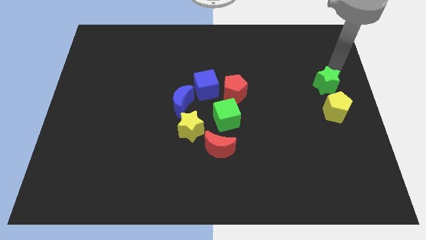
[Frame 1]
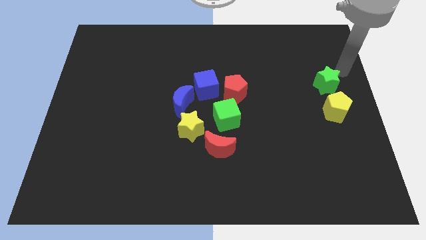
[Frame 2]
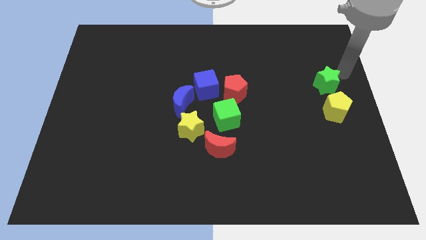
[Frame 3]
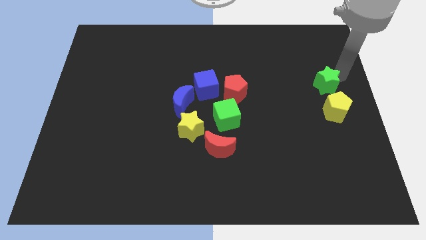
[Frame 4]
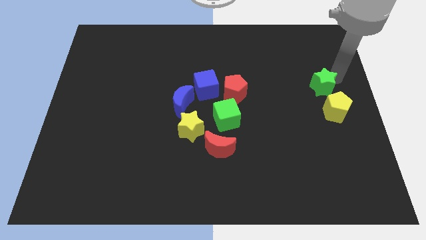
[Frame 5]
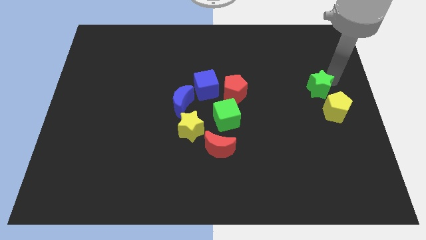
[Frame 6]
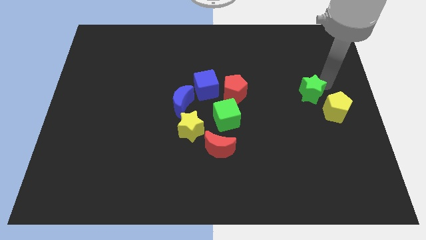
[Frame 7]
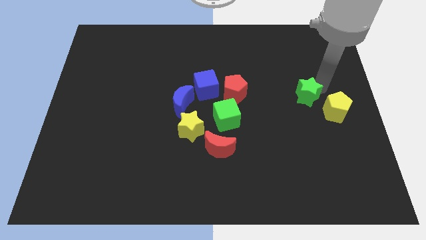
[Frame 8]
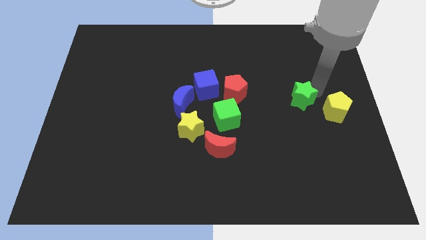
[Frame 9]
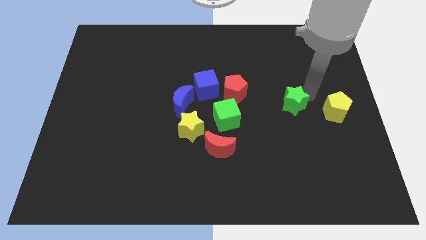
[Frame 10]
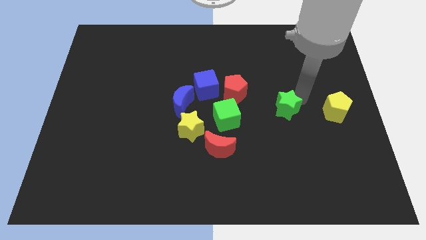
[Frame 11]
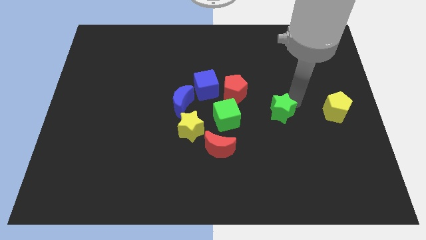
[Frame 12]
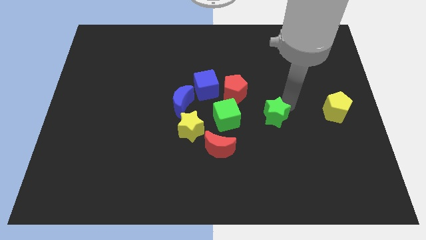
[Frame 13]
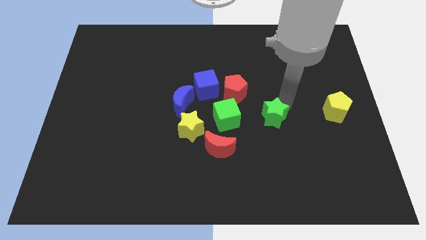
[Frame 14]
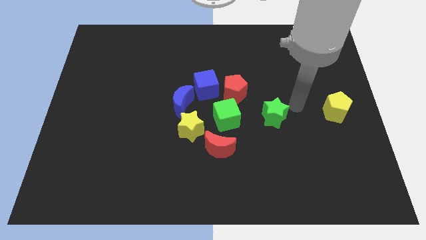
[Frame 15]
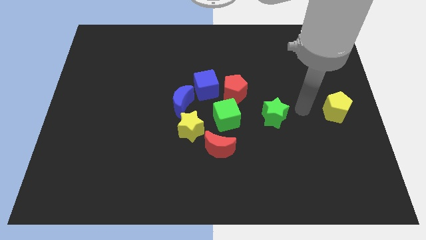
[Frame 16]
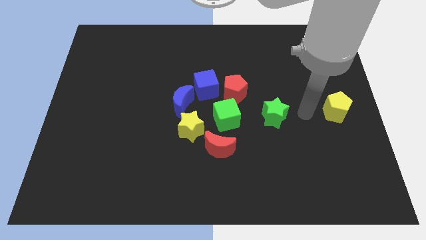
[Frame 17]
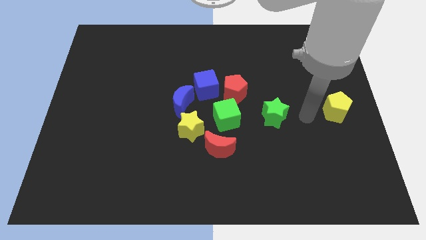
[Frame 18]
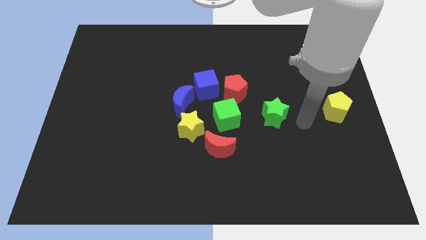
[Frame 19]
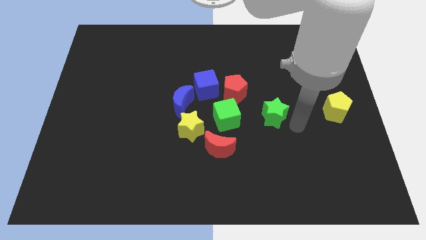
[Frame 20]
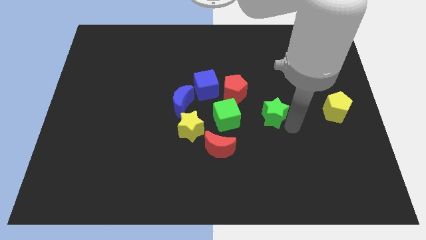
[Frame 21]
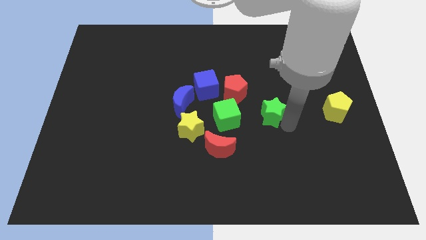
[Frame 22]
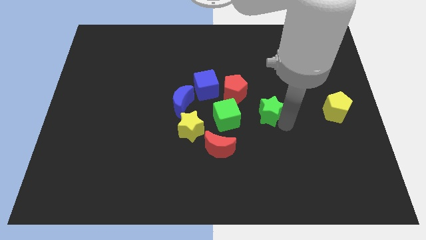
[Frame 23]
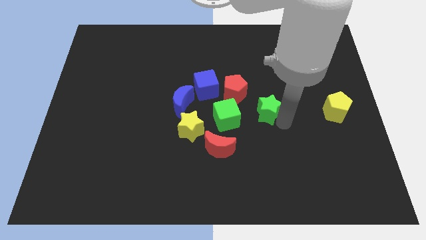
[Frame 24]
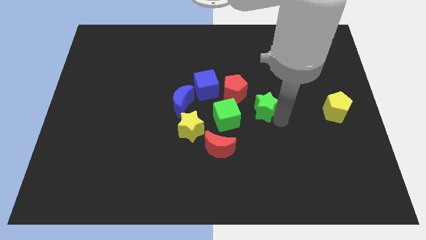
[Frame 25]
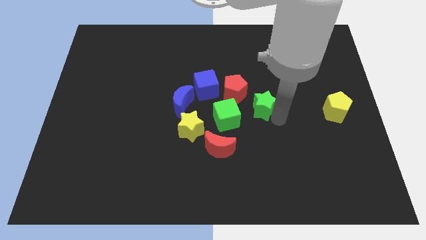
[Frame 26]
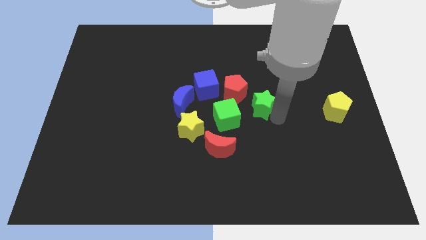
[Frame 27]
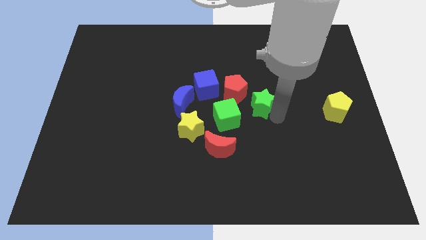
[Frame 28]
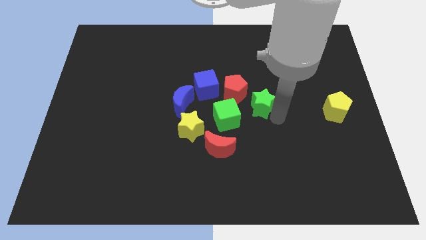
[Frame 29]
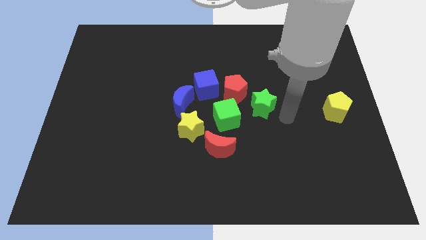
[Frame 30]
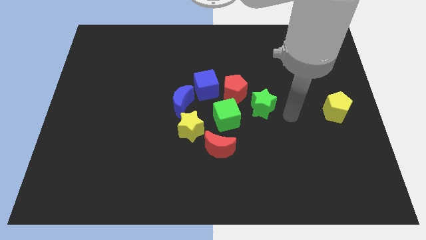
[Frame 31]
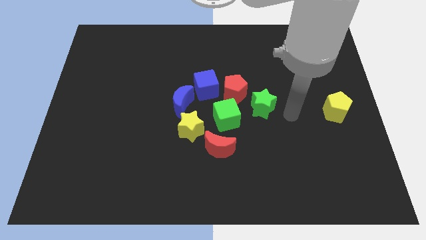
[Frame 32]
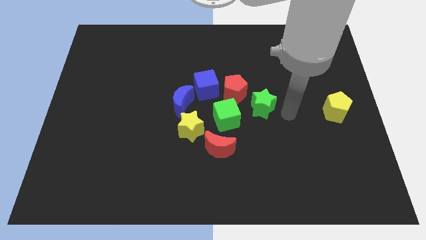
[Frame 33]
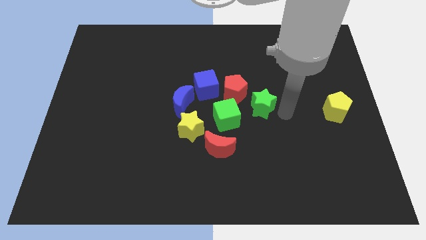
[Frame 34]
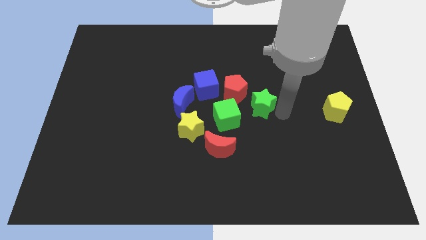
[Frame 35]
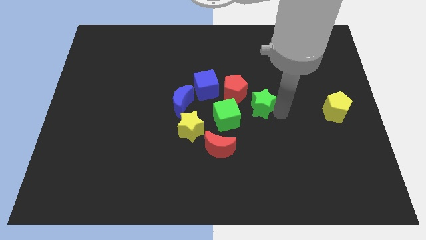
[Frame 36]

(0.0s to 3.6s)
place the green star near the red pentagon

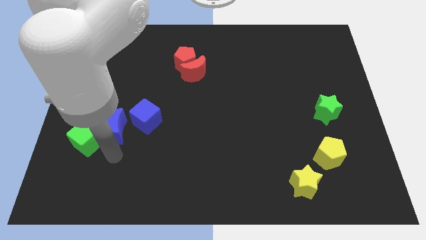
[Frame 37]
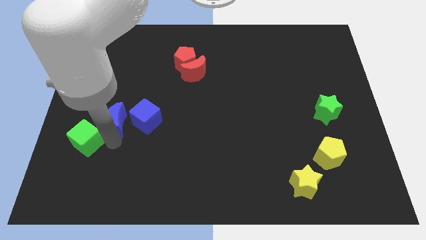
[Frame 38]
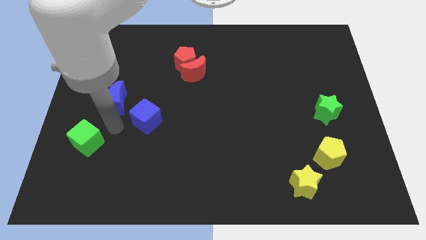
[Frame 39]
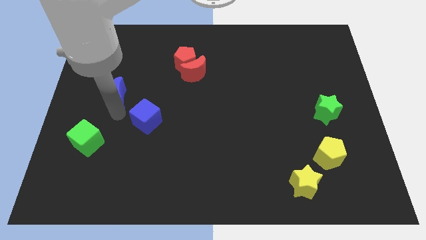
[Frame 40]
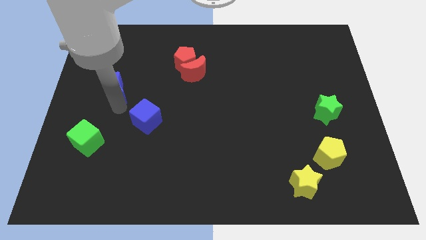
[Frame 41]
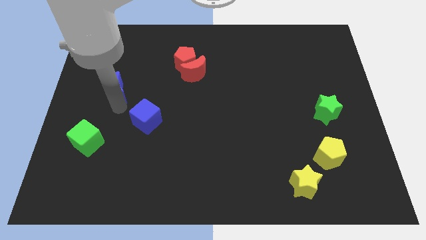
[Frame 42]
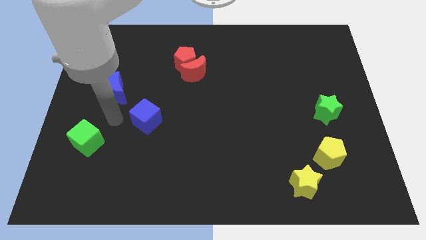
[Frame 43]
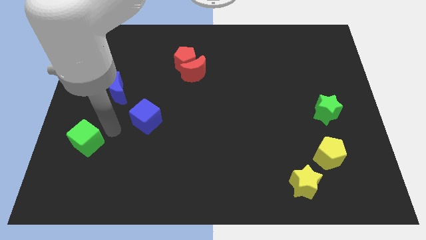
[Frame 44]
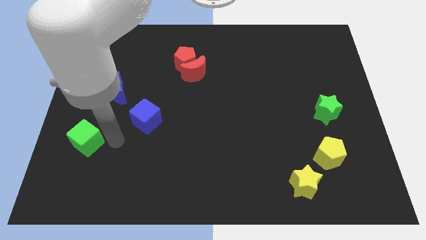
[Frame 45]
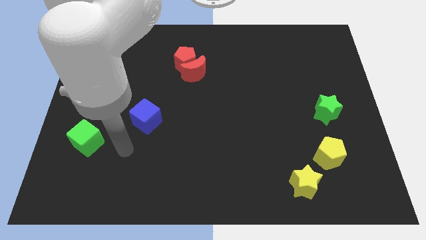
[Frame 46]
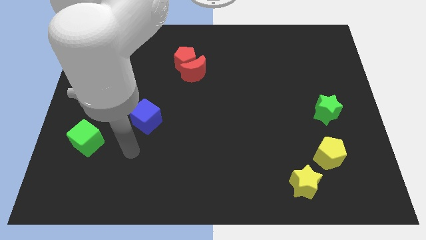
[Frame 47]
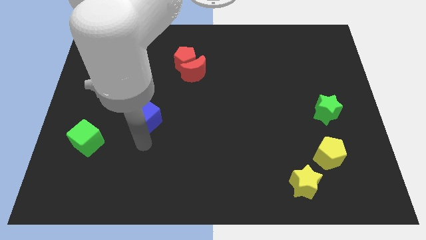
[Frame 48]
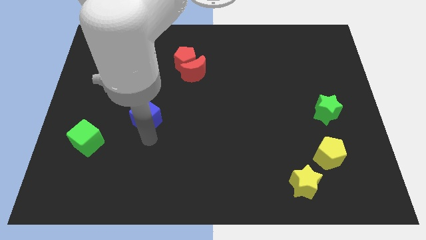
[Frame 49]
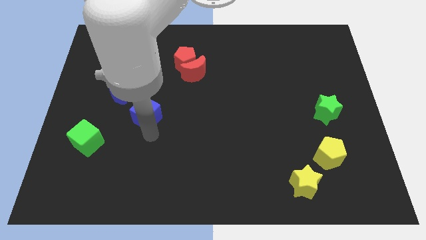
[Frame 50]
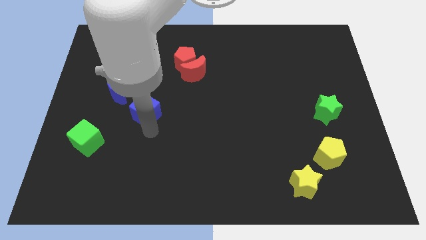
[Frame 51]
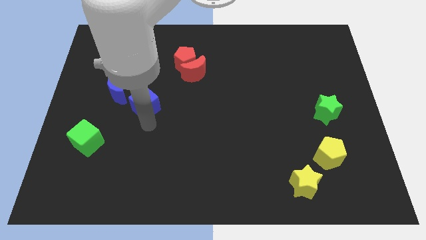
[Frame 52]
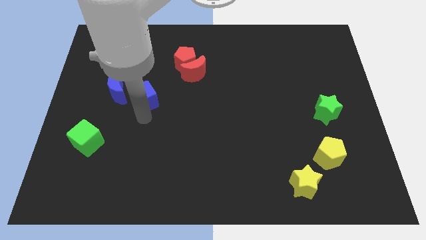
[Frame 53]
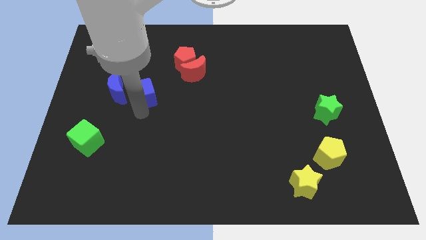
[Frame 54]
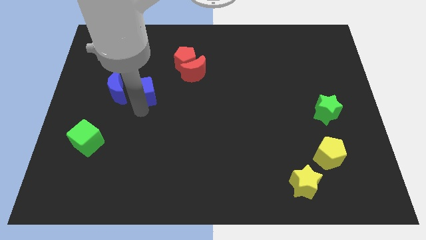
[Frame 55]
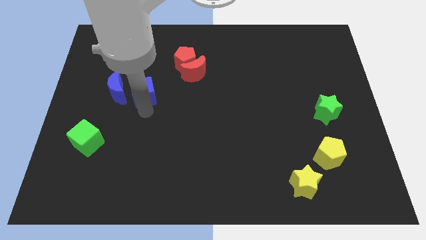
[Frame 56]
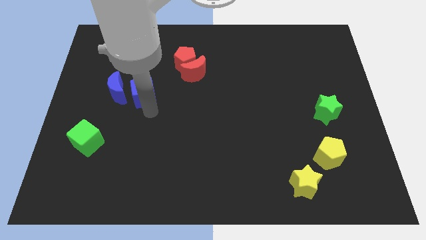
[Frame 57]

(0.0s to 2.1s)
push the blue cube and crescent upwards

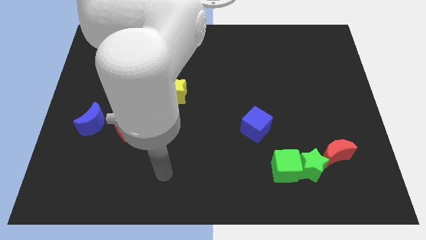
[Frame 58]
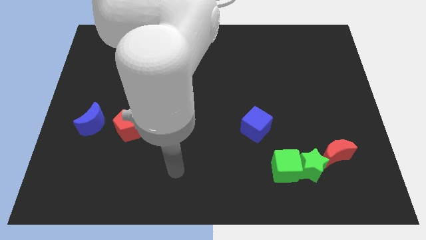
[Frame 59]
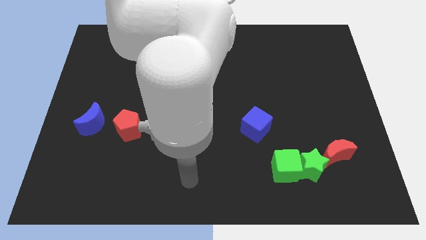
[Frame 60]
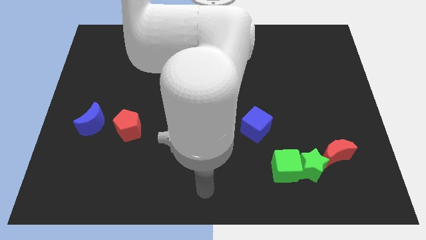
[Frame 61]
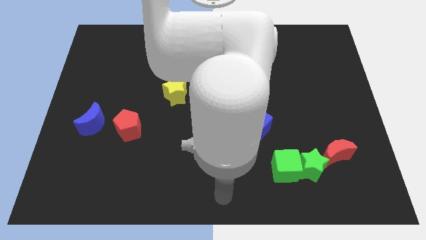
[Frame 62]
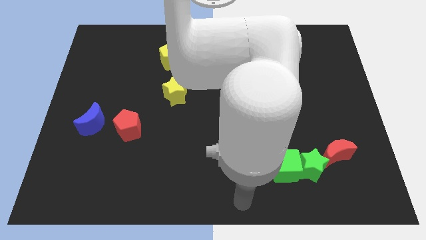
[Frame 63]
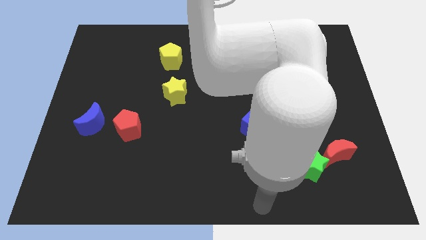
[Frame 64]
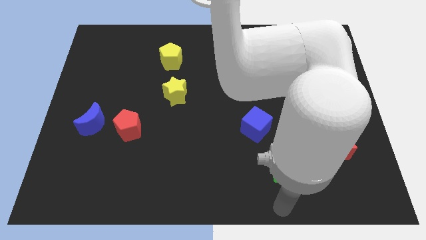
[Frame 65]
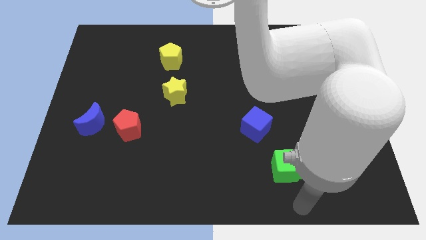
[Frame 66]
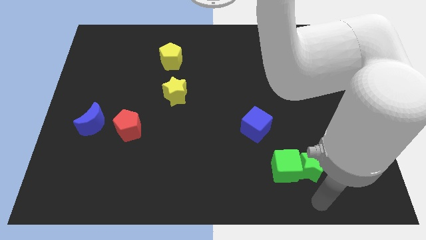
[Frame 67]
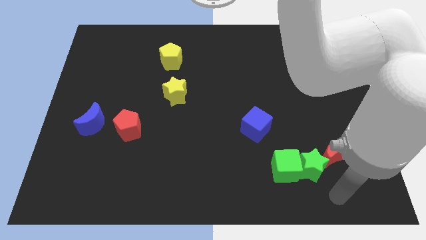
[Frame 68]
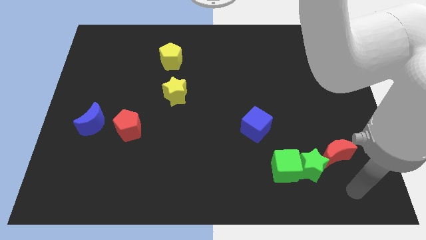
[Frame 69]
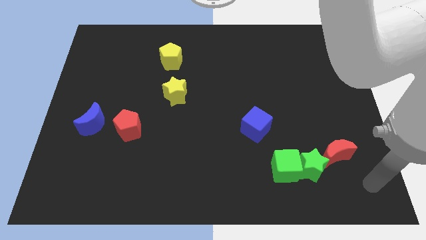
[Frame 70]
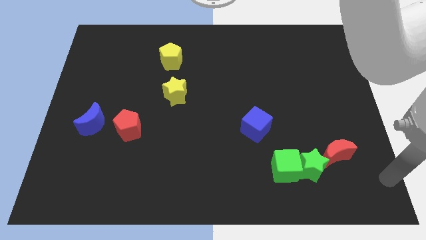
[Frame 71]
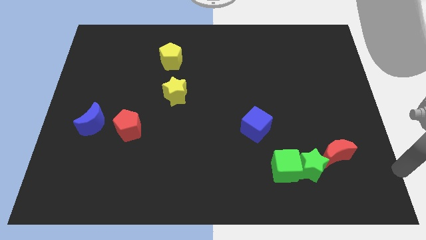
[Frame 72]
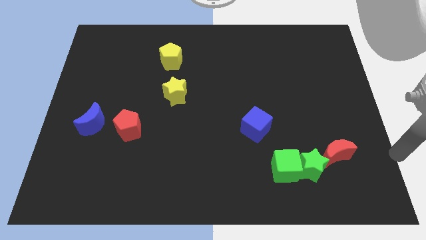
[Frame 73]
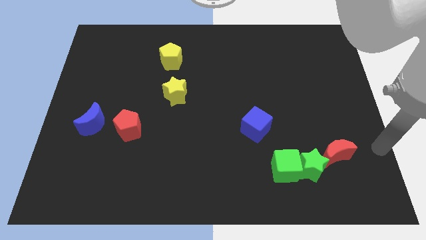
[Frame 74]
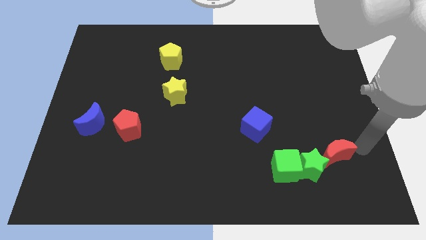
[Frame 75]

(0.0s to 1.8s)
move the arm to the right of the red crescent

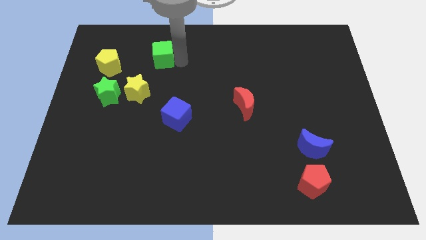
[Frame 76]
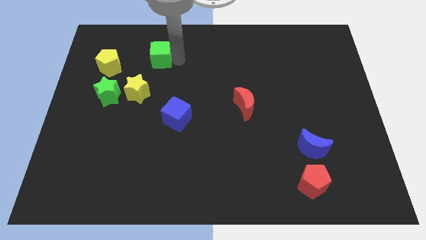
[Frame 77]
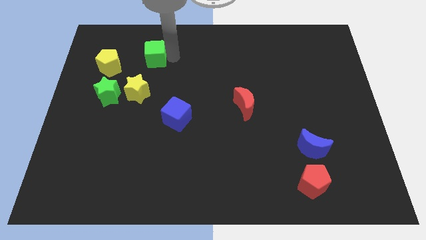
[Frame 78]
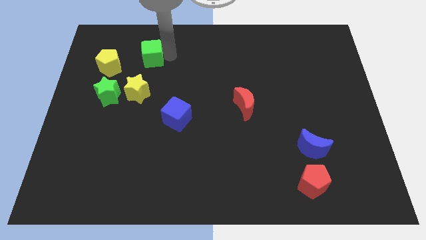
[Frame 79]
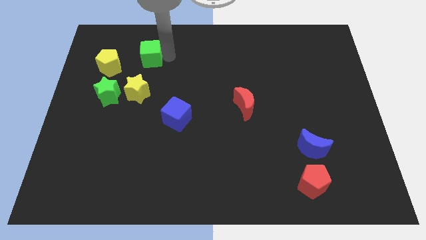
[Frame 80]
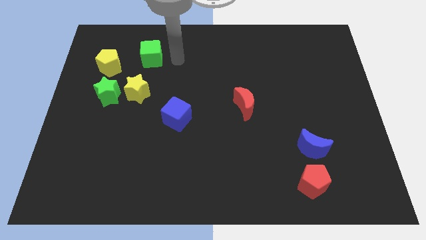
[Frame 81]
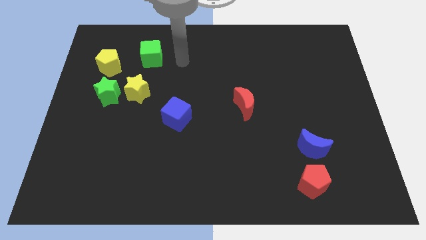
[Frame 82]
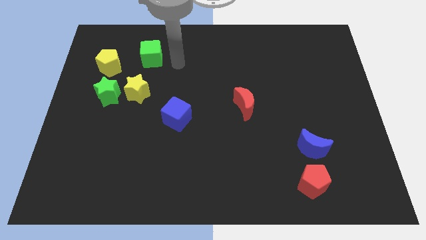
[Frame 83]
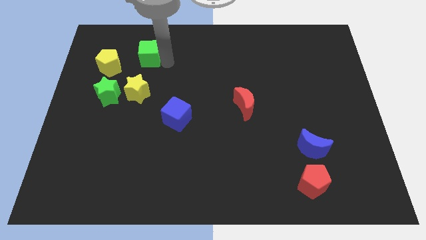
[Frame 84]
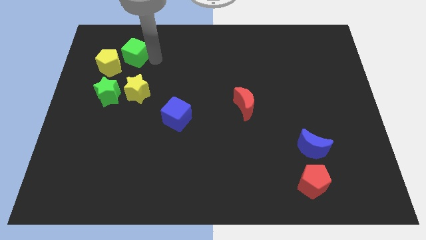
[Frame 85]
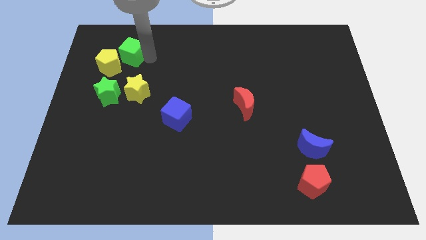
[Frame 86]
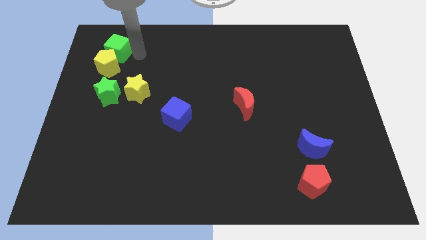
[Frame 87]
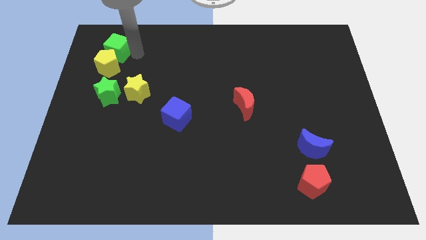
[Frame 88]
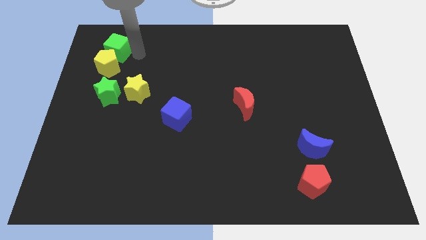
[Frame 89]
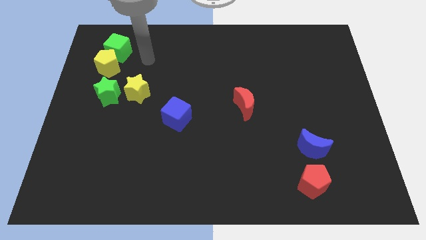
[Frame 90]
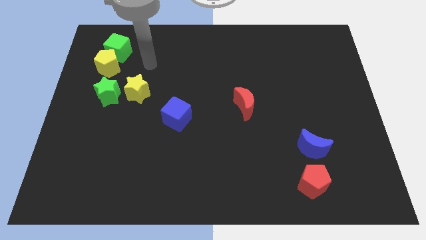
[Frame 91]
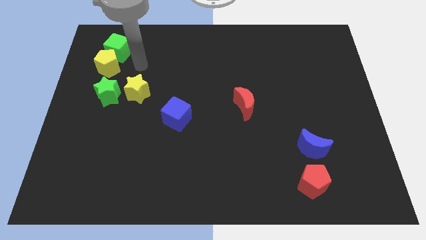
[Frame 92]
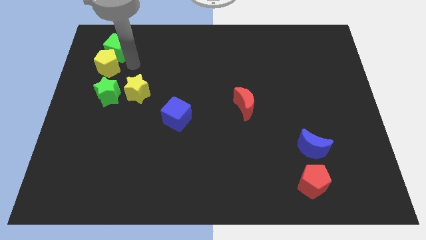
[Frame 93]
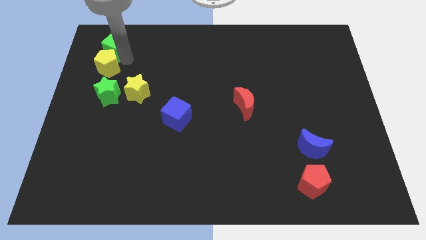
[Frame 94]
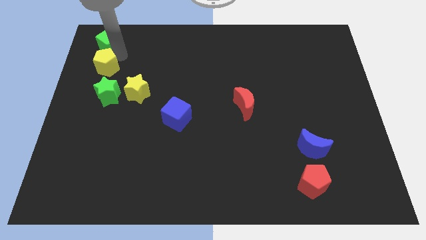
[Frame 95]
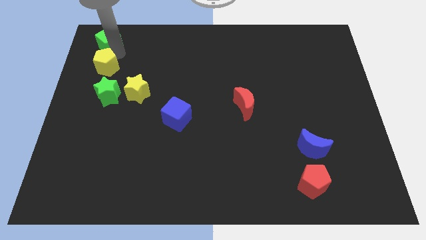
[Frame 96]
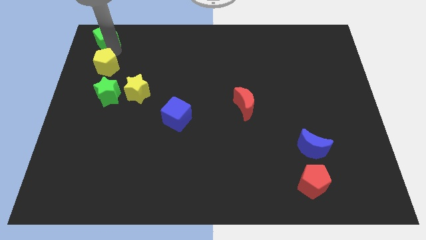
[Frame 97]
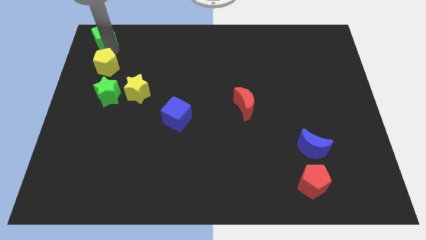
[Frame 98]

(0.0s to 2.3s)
push the green cube above to the yellow pentagon
